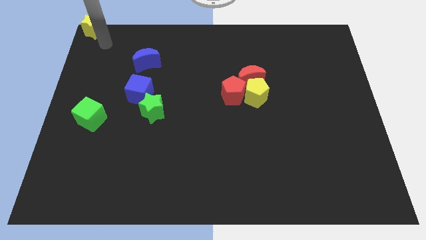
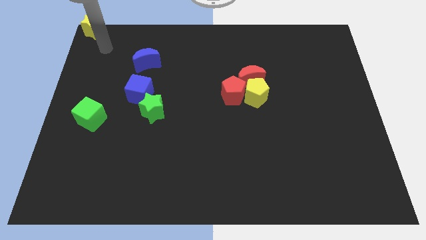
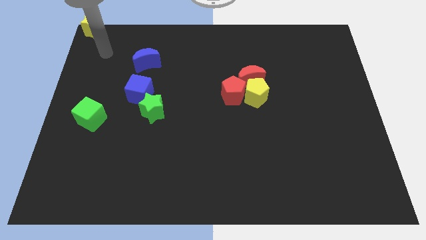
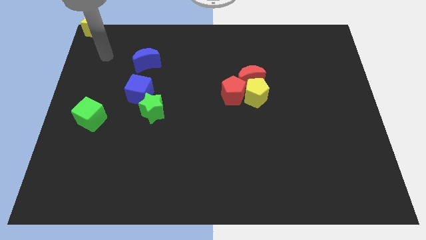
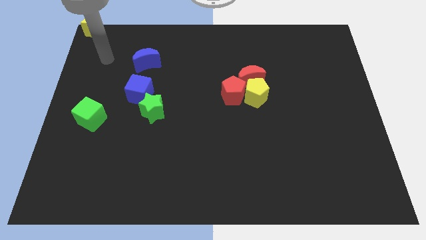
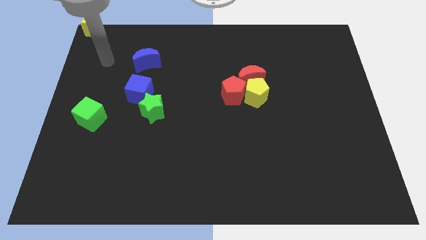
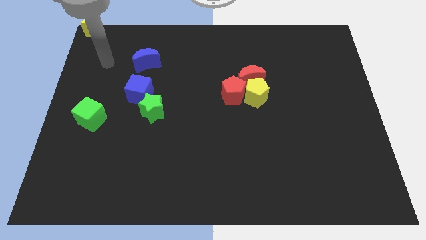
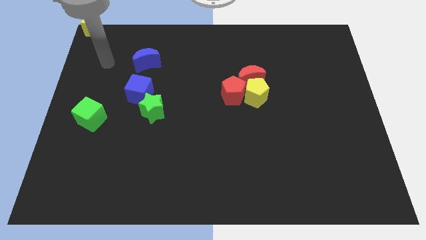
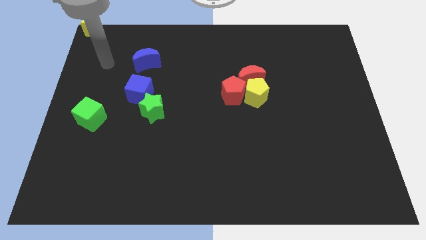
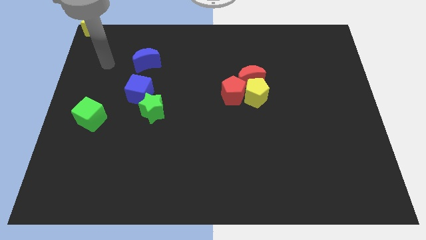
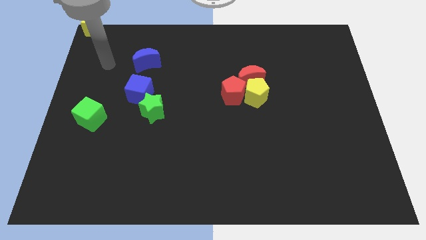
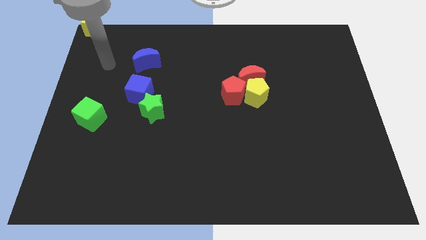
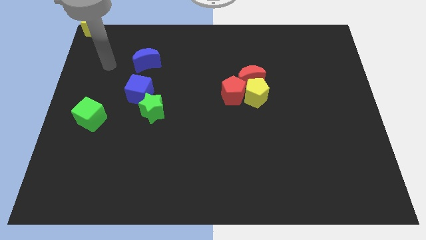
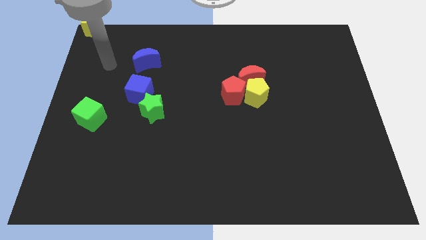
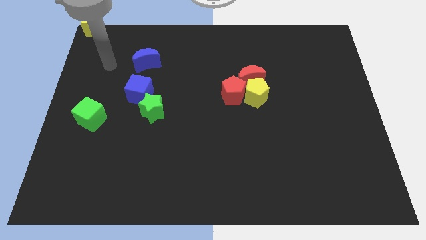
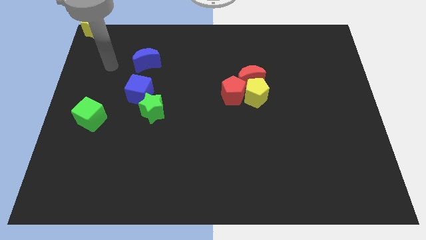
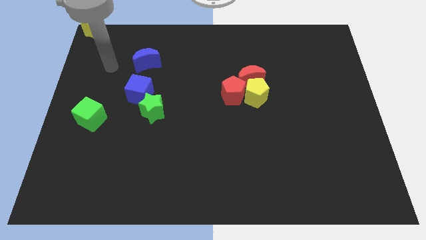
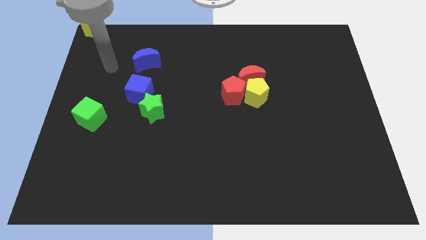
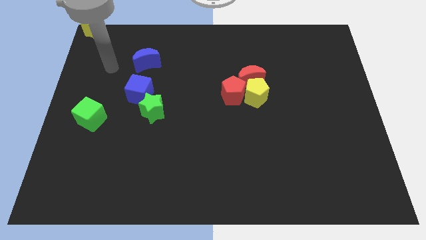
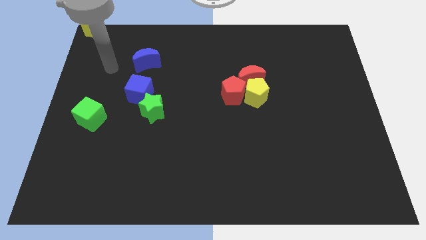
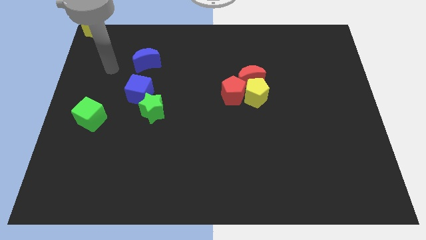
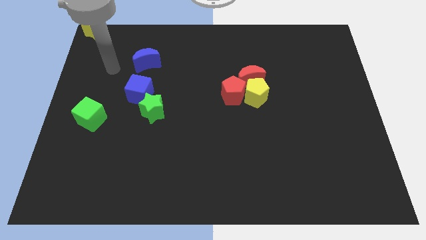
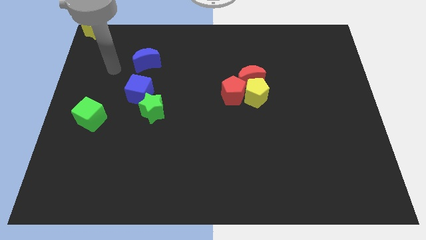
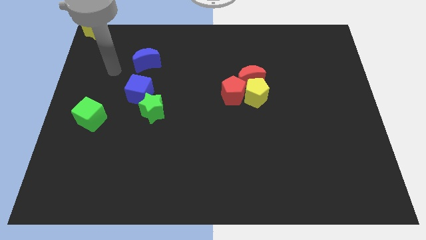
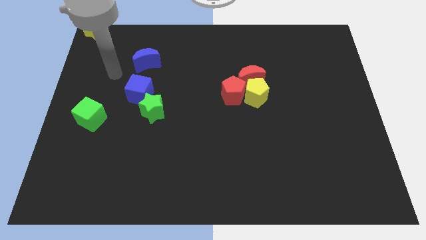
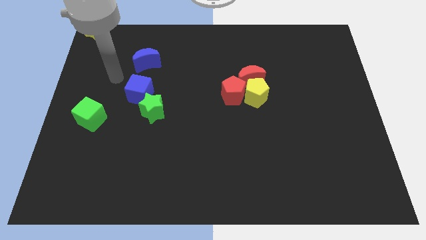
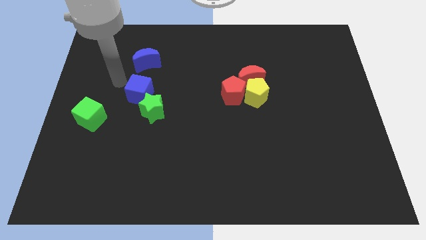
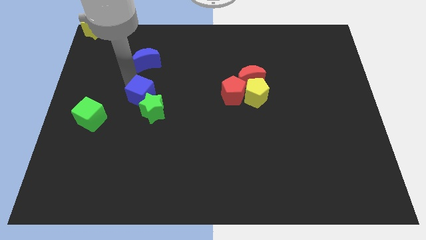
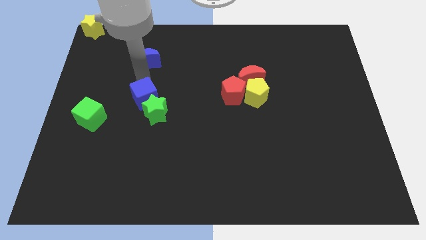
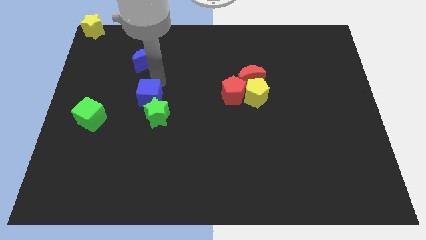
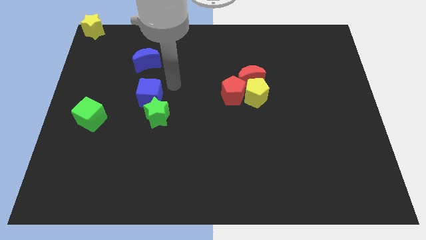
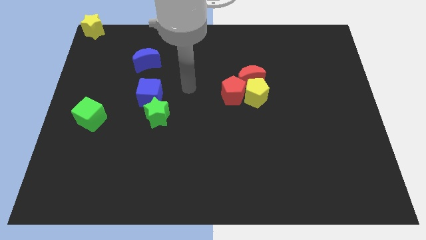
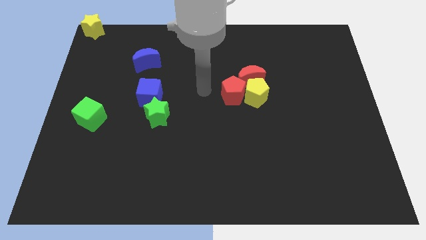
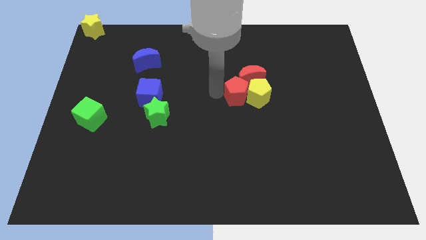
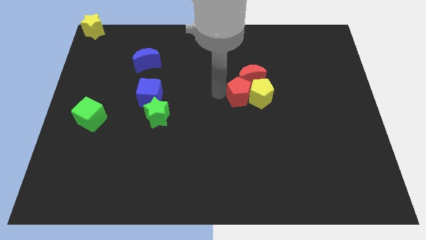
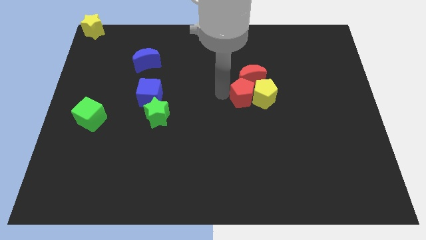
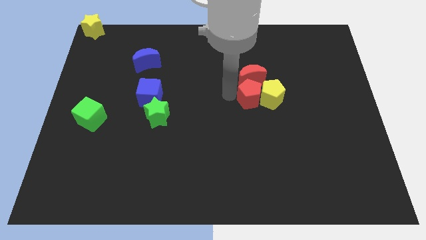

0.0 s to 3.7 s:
push the blue cube into the green star

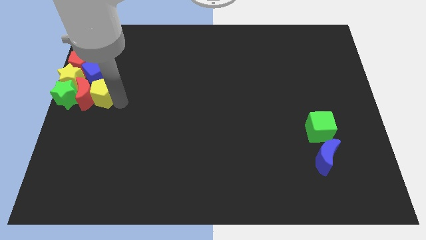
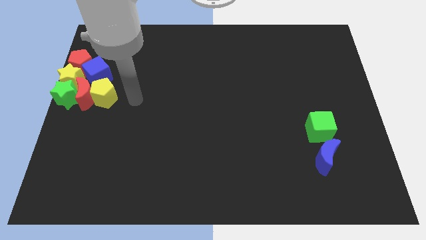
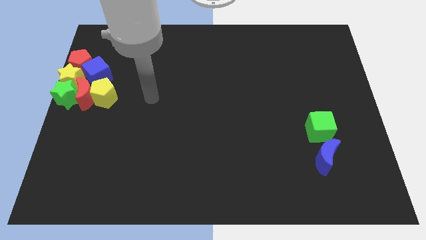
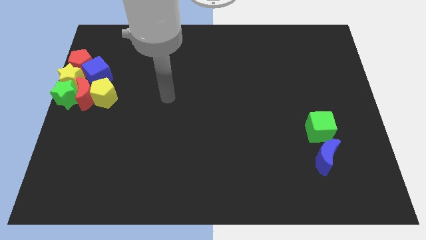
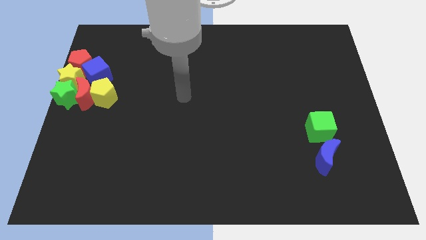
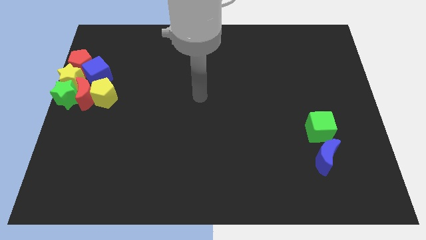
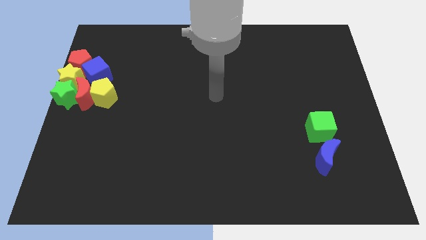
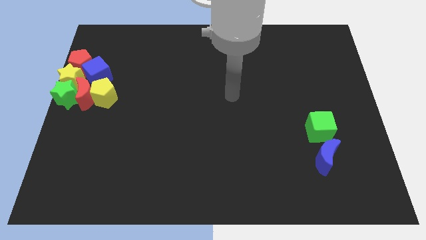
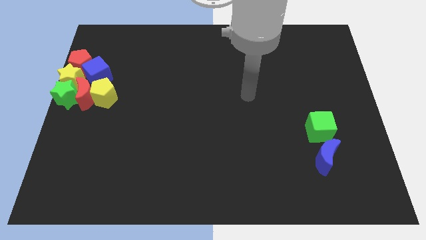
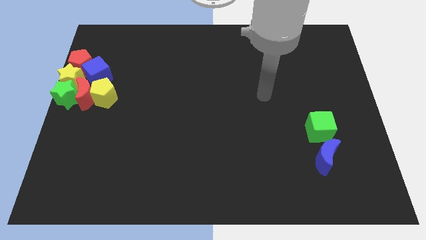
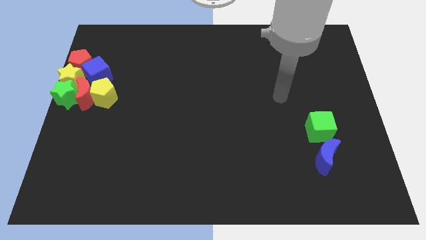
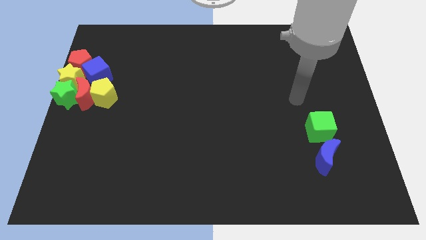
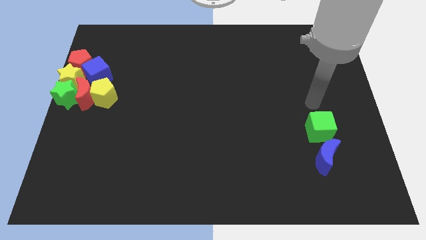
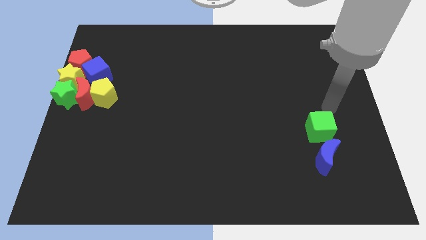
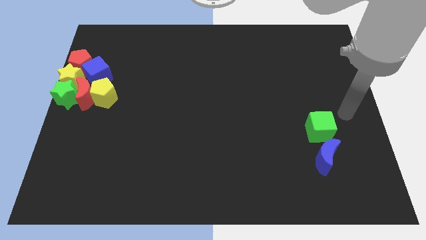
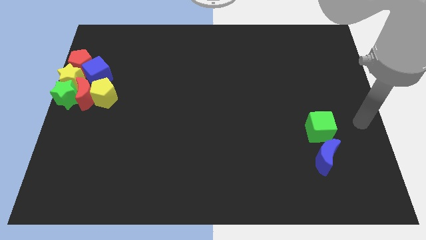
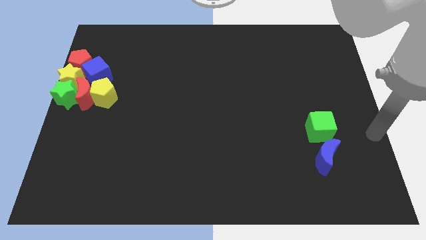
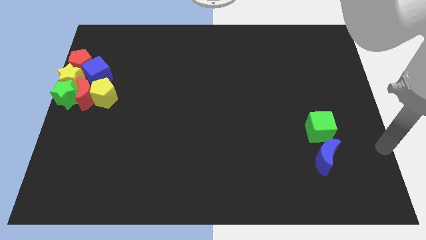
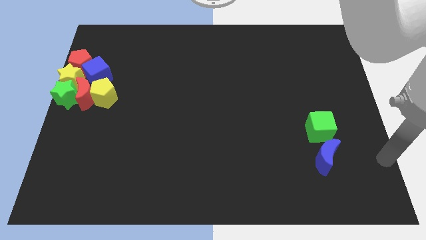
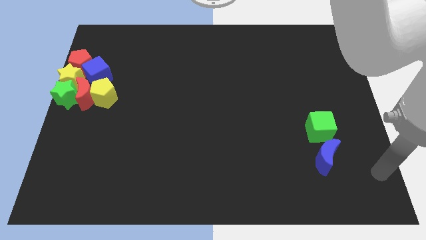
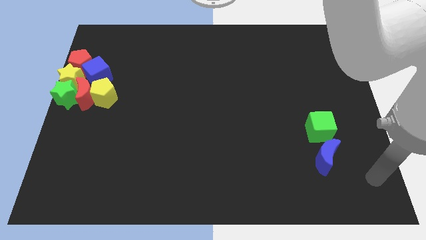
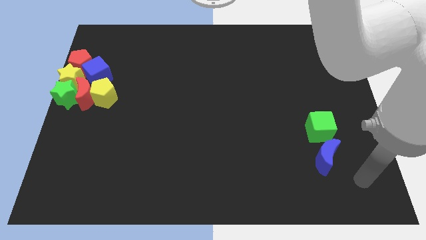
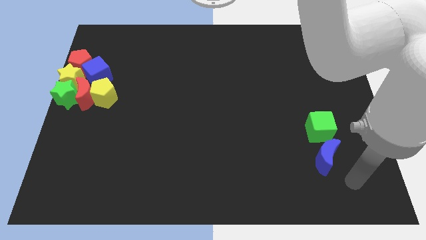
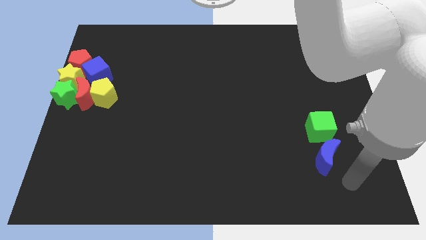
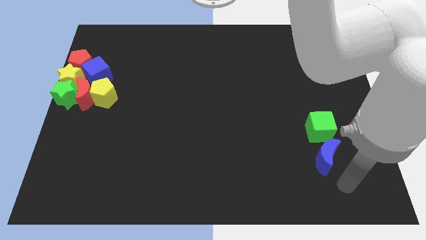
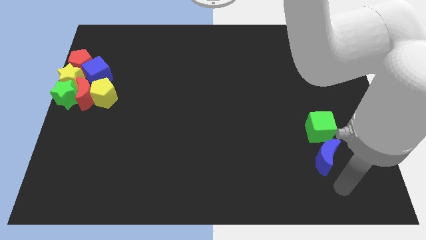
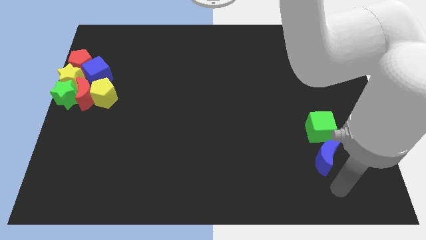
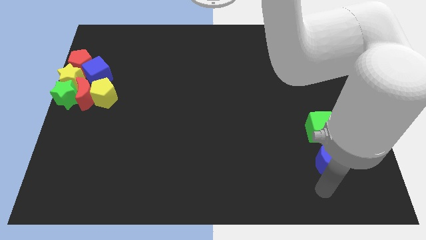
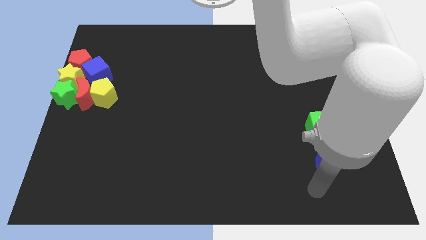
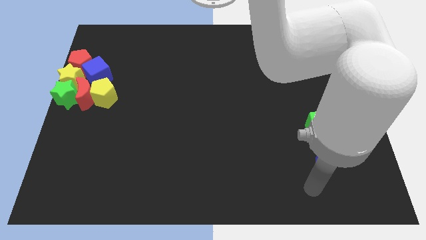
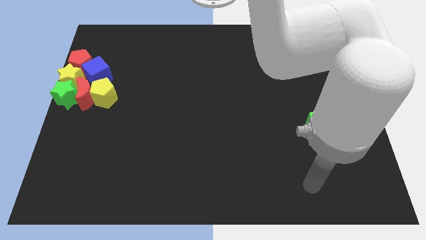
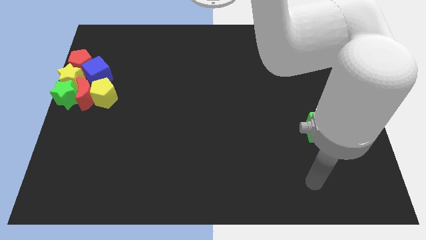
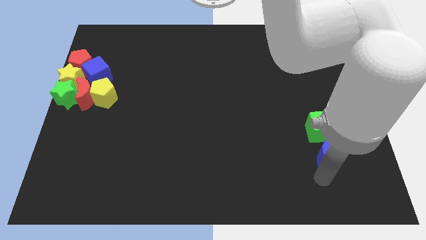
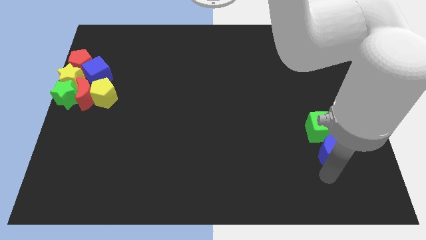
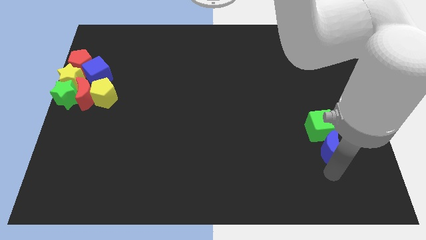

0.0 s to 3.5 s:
push the blue crescent into the green cube

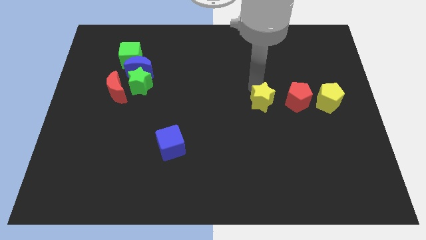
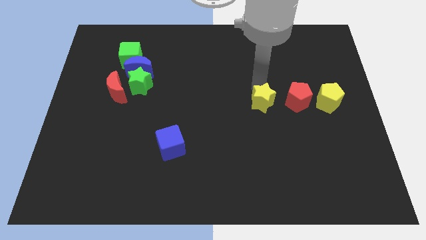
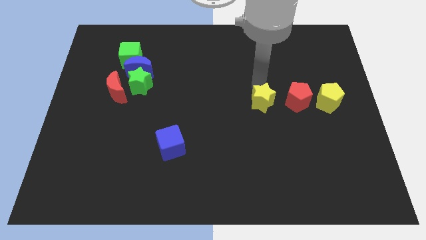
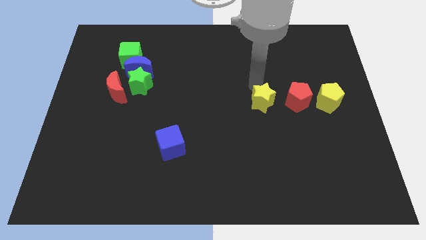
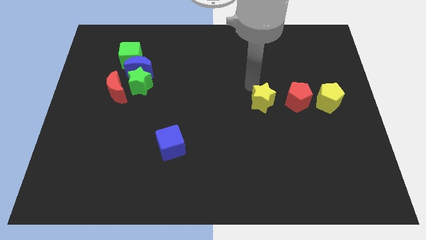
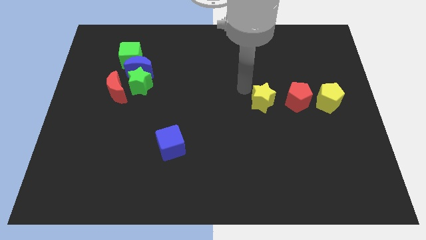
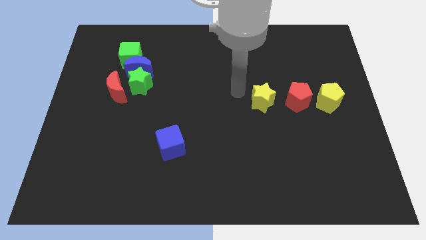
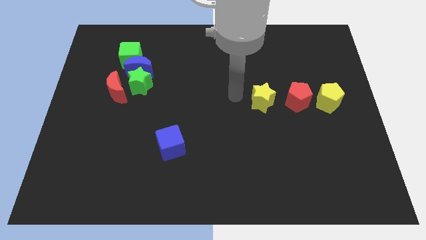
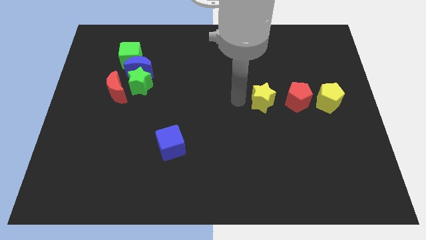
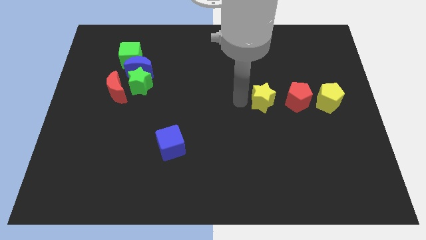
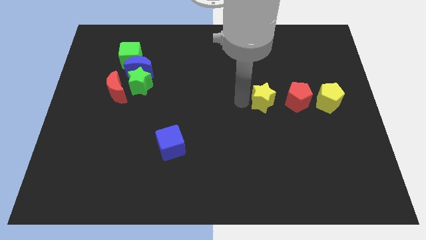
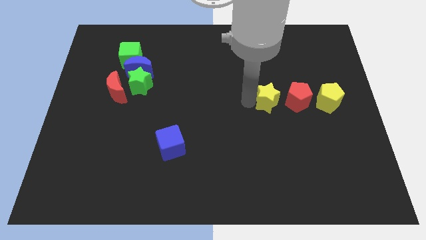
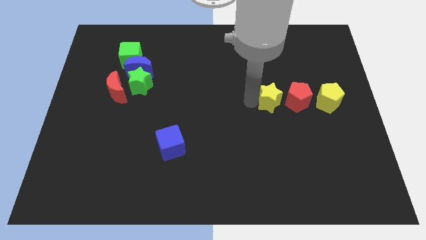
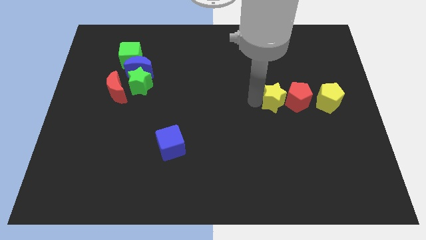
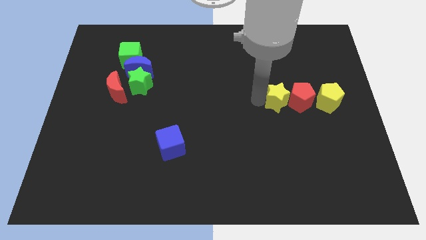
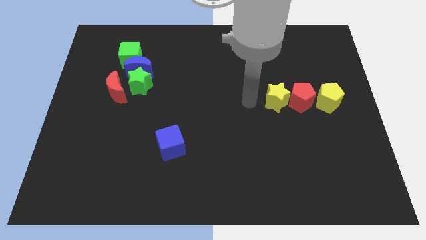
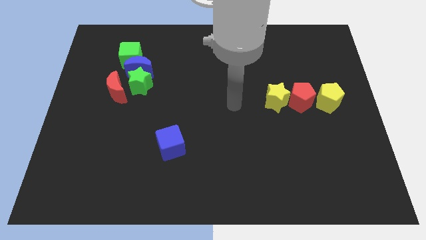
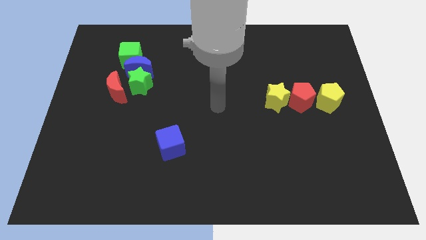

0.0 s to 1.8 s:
push the yellow star into the red pentagon
